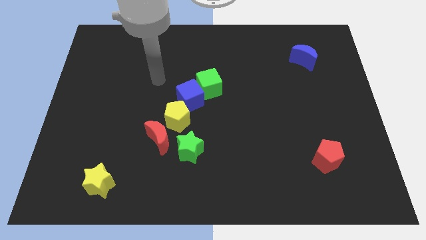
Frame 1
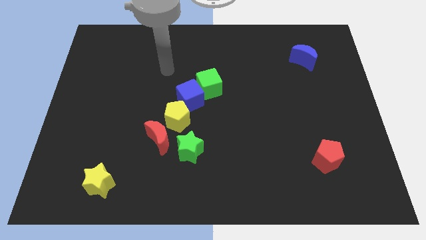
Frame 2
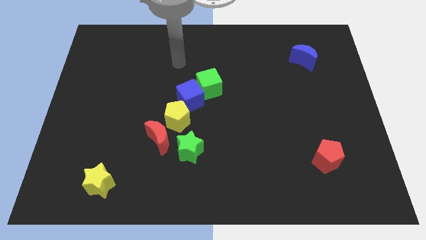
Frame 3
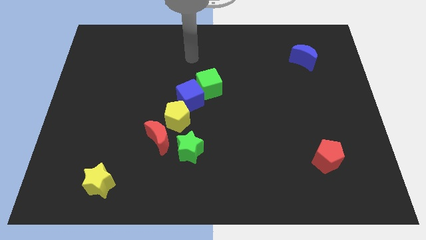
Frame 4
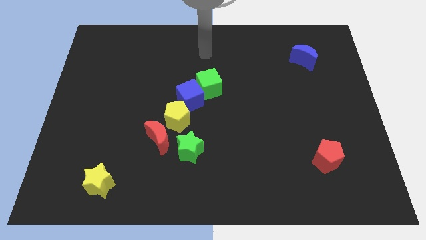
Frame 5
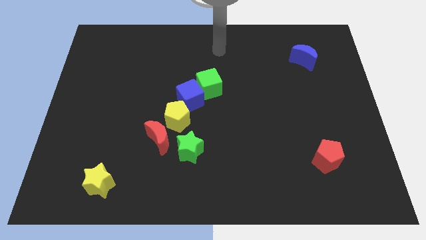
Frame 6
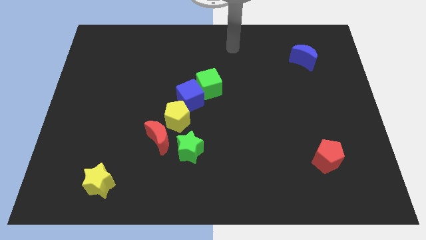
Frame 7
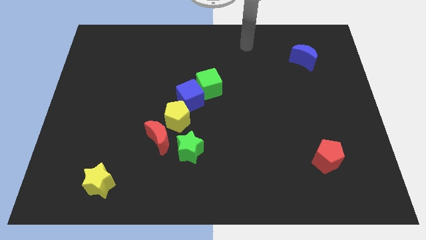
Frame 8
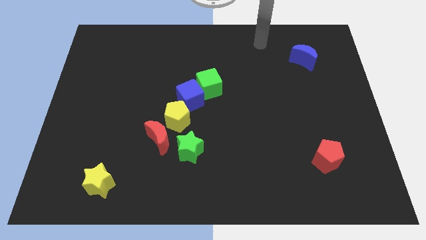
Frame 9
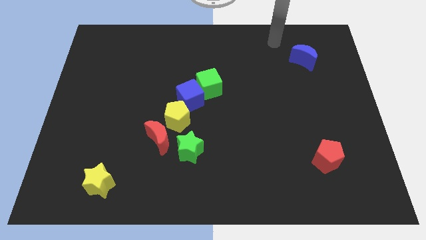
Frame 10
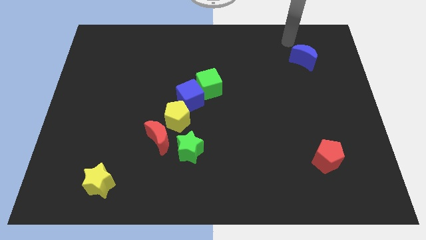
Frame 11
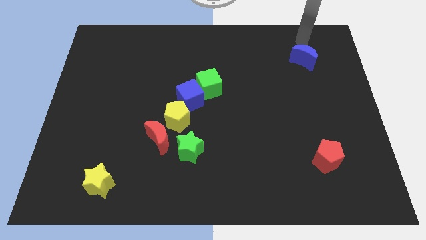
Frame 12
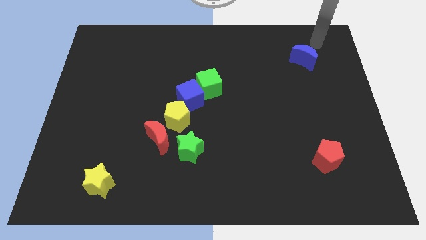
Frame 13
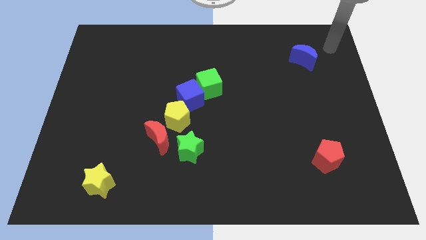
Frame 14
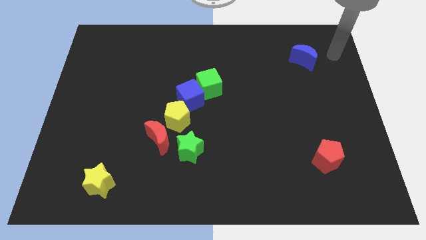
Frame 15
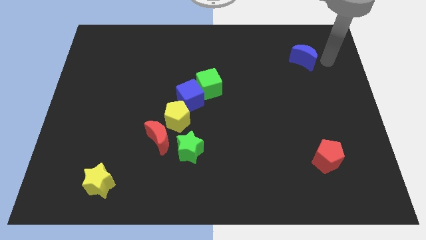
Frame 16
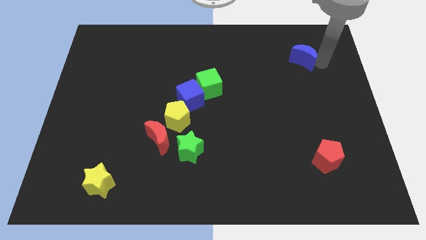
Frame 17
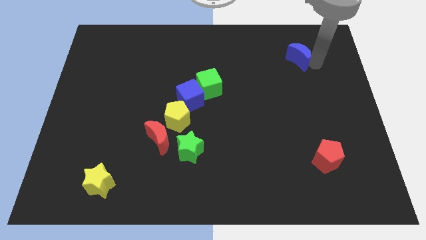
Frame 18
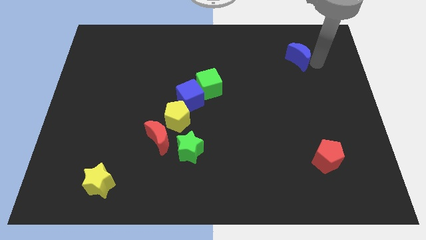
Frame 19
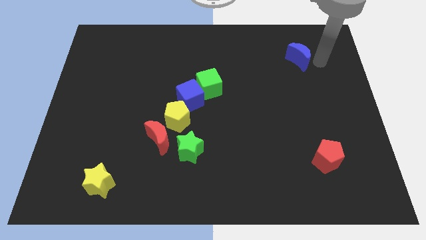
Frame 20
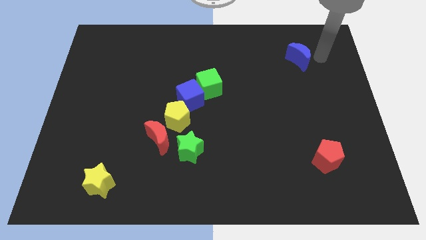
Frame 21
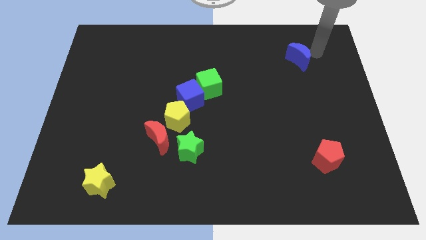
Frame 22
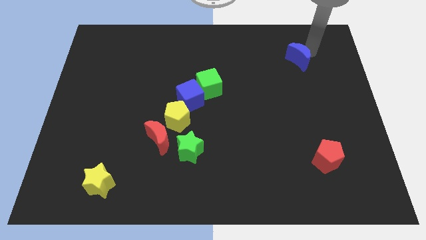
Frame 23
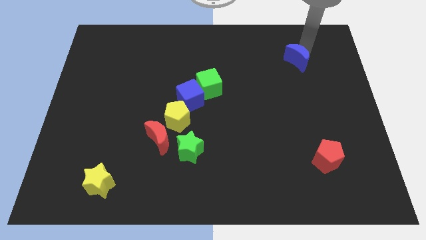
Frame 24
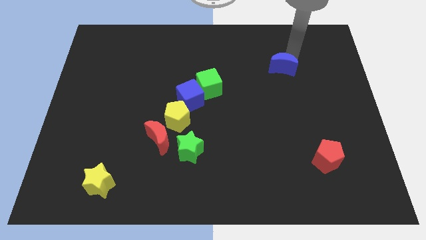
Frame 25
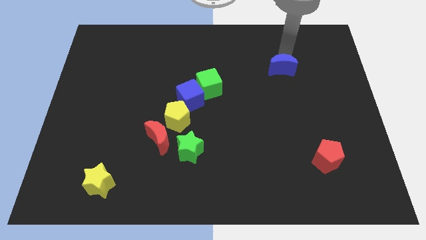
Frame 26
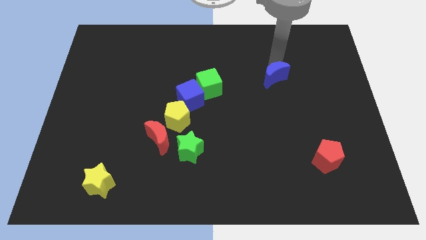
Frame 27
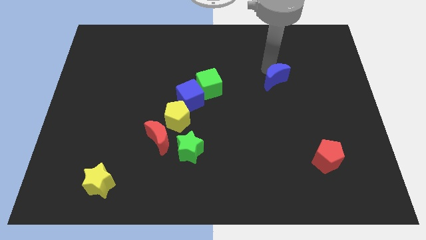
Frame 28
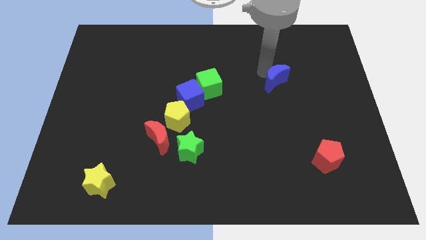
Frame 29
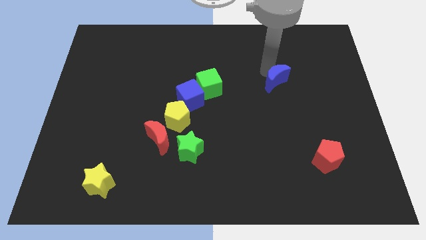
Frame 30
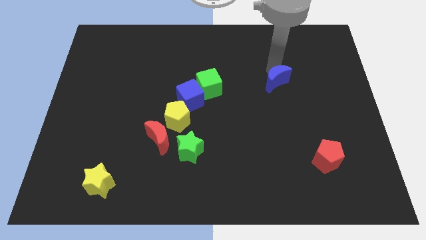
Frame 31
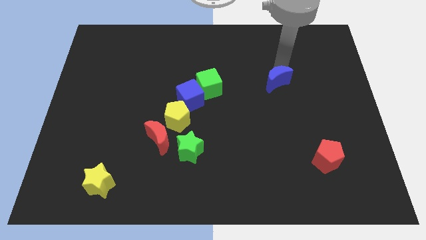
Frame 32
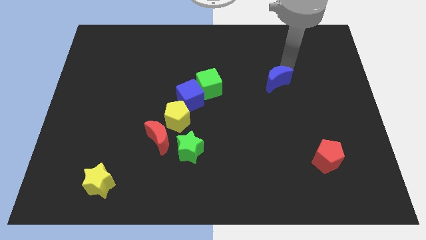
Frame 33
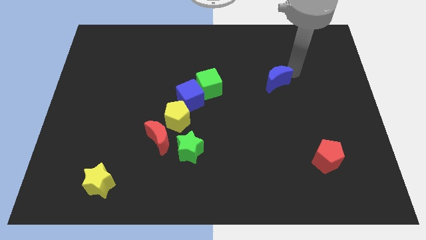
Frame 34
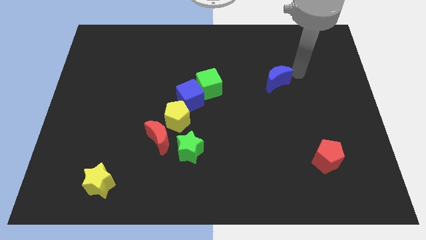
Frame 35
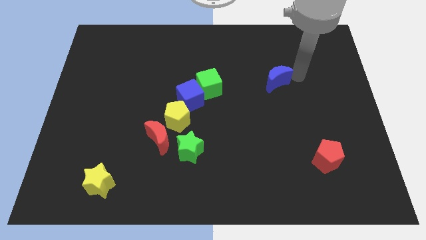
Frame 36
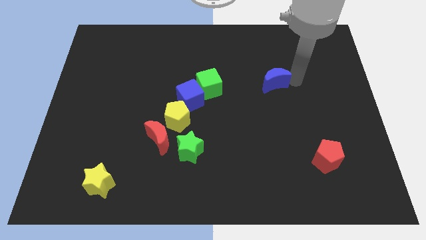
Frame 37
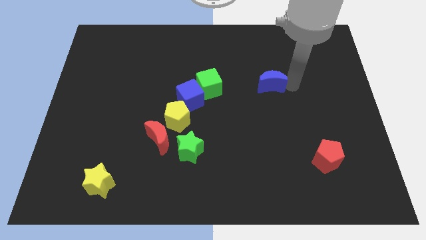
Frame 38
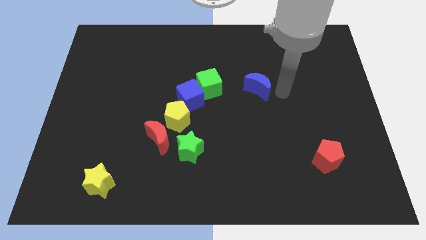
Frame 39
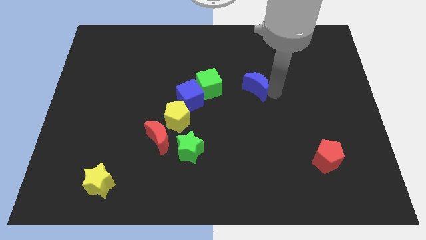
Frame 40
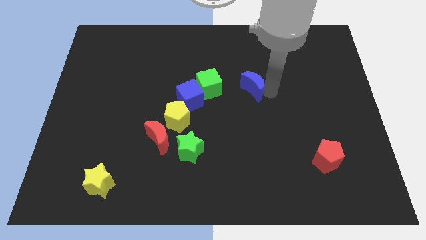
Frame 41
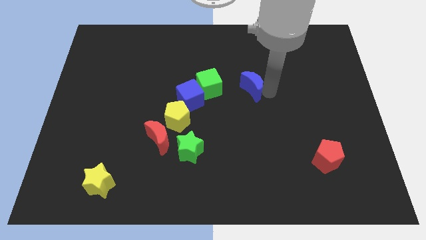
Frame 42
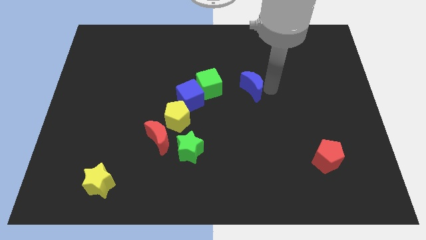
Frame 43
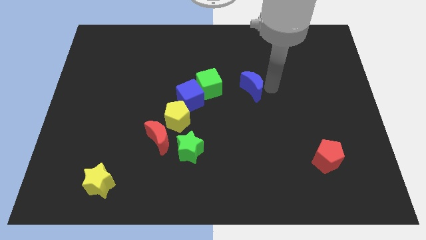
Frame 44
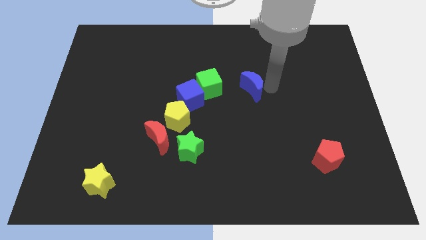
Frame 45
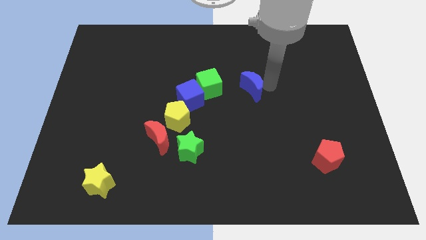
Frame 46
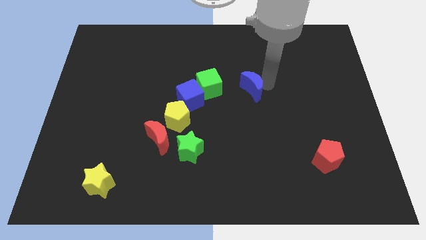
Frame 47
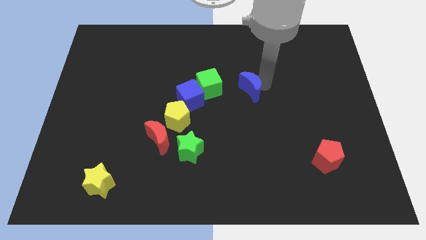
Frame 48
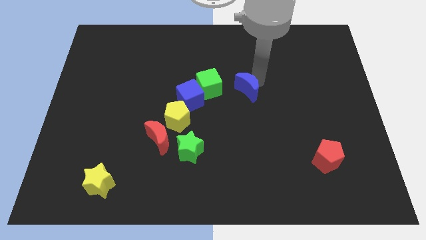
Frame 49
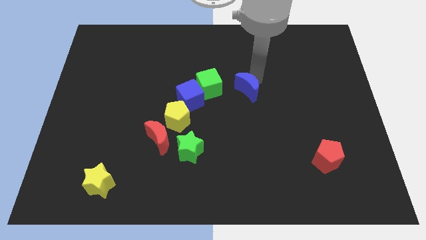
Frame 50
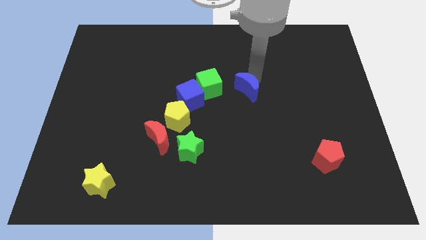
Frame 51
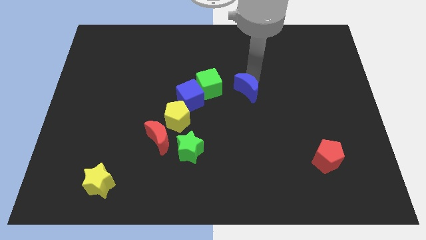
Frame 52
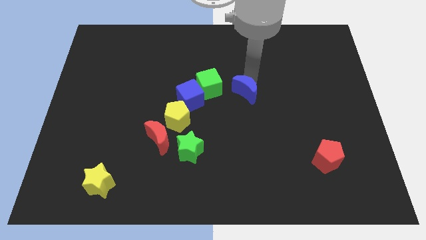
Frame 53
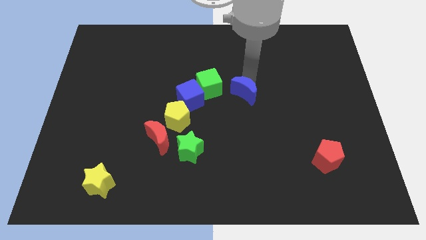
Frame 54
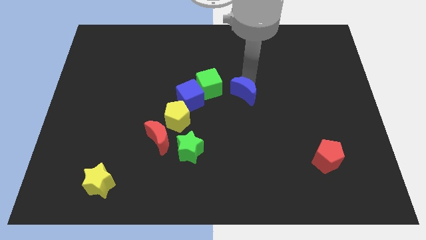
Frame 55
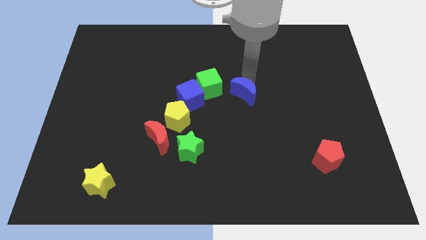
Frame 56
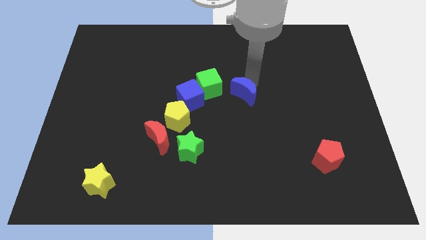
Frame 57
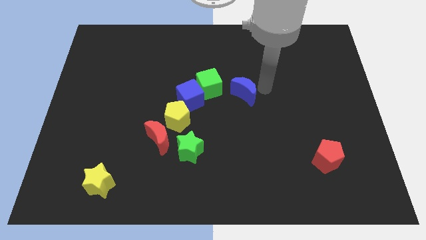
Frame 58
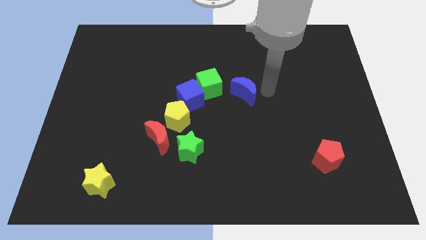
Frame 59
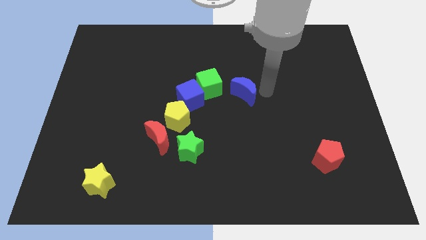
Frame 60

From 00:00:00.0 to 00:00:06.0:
drag the blue moon diagonally on the bottom right of the green cube

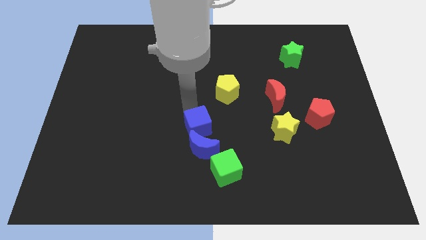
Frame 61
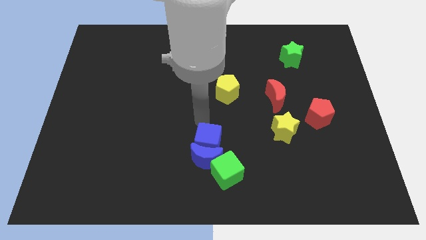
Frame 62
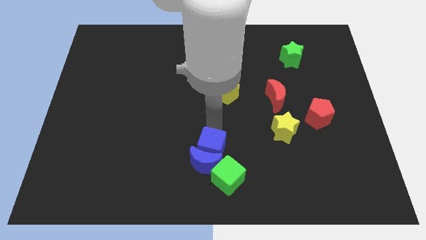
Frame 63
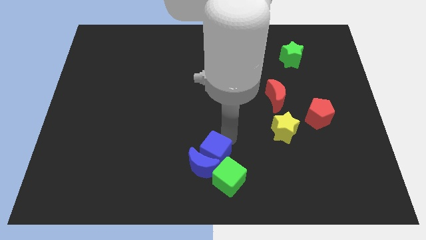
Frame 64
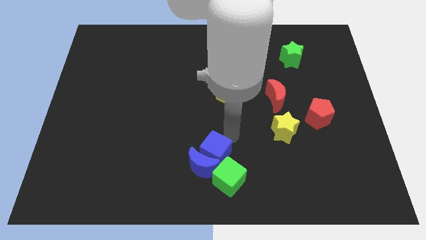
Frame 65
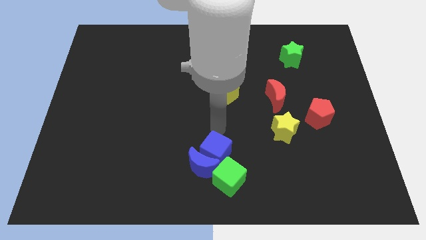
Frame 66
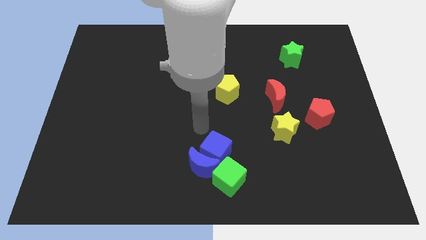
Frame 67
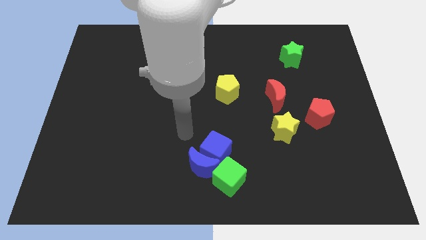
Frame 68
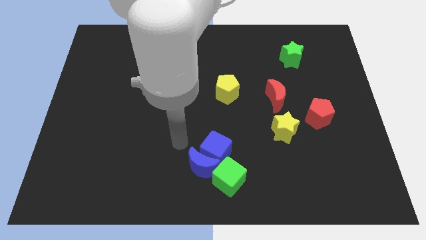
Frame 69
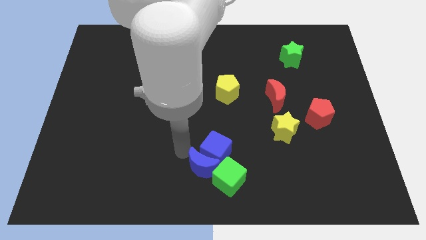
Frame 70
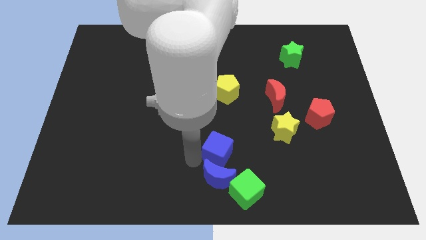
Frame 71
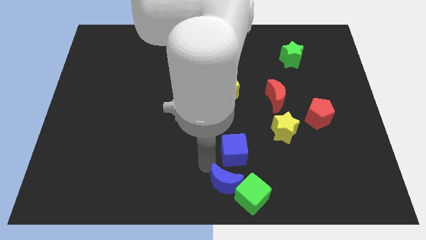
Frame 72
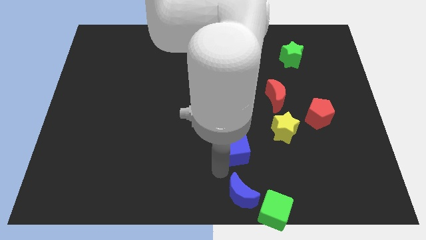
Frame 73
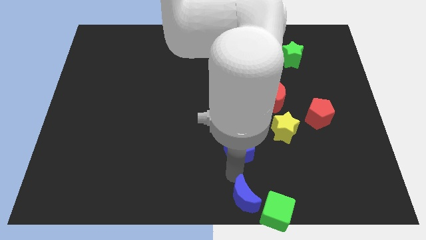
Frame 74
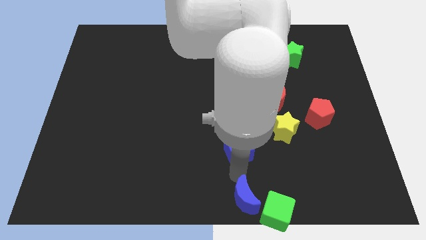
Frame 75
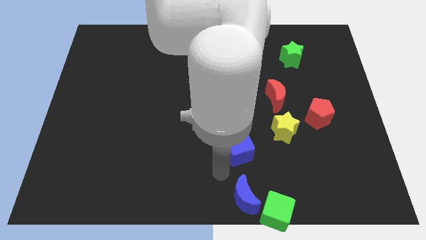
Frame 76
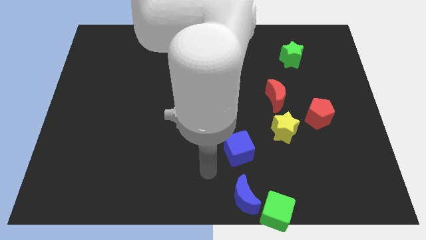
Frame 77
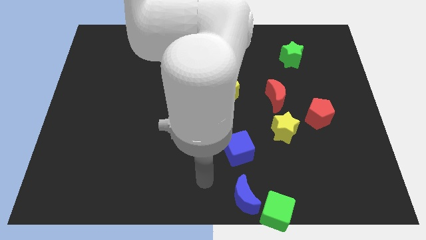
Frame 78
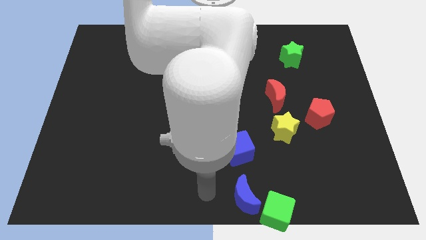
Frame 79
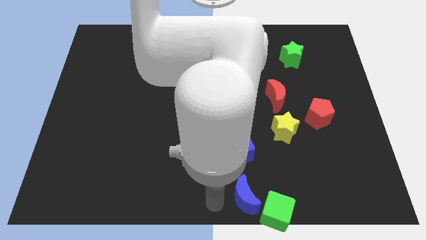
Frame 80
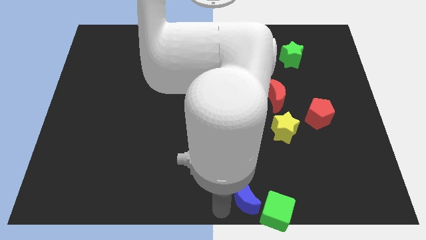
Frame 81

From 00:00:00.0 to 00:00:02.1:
push blue blocks into green cube

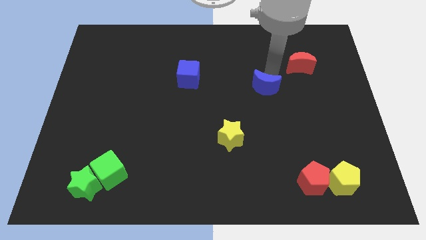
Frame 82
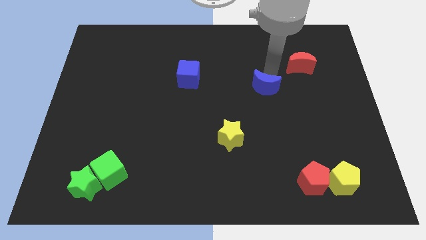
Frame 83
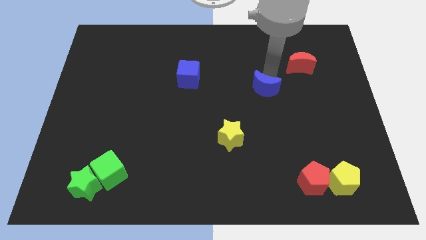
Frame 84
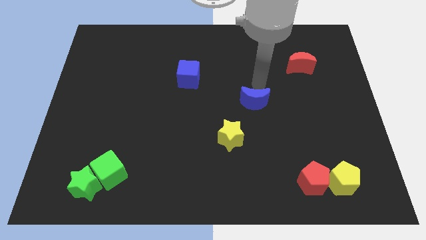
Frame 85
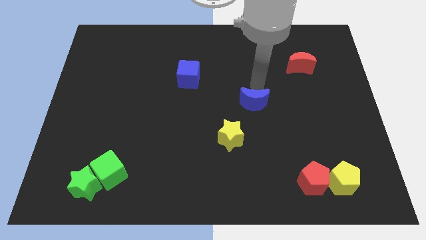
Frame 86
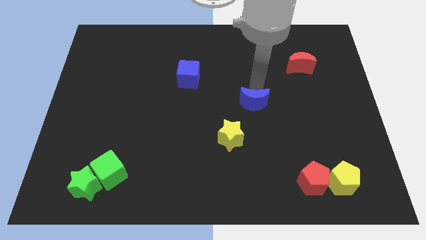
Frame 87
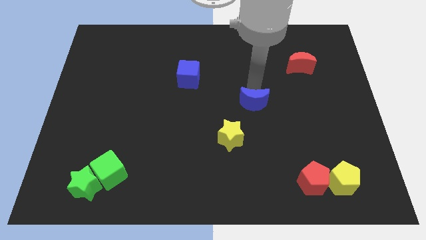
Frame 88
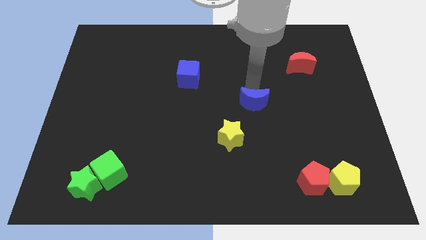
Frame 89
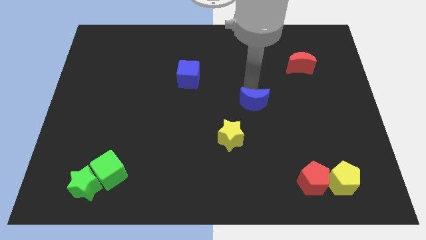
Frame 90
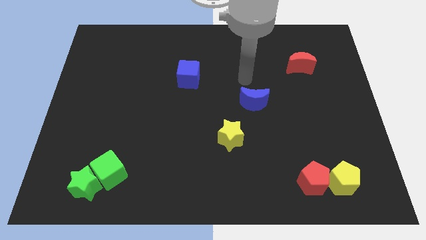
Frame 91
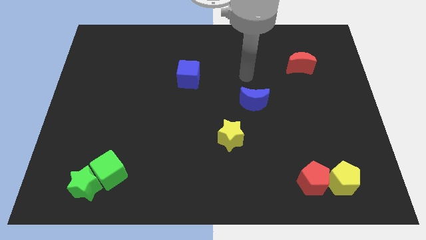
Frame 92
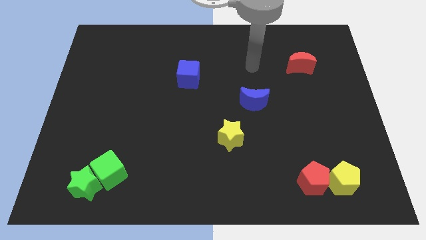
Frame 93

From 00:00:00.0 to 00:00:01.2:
place the blue crescent close to the yellow star
